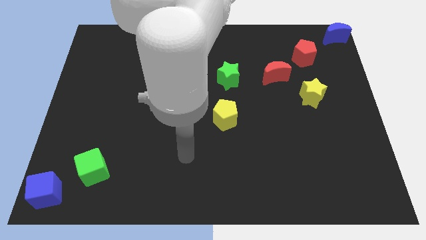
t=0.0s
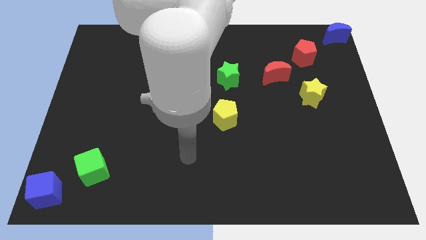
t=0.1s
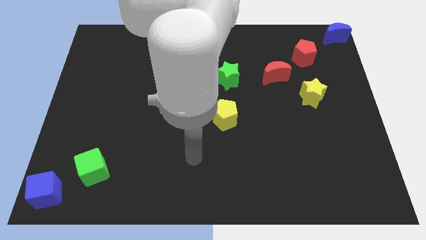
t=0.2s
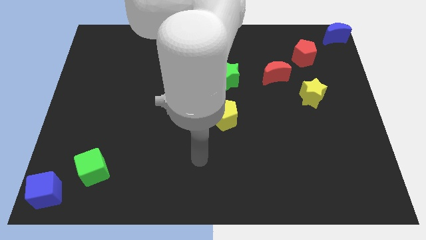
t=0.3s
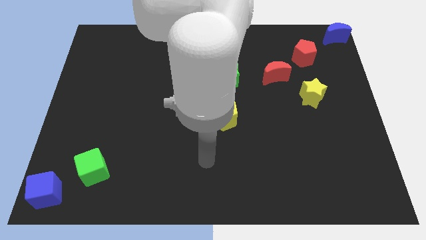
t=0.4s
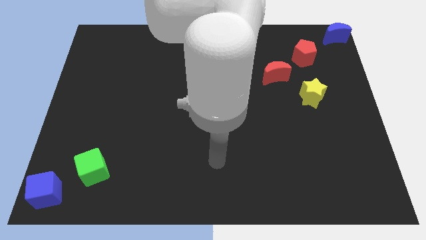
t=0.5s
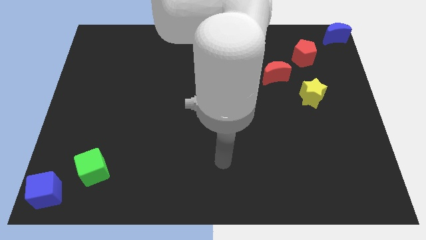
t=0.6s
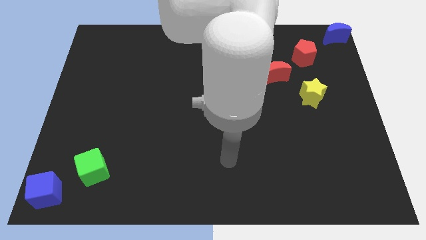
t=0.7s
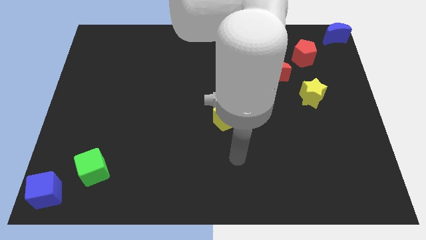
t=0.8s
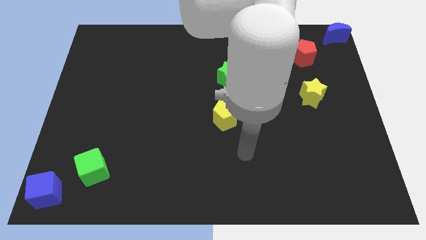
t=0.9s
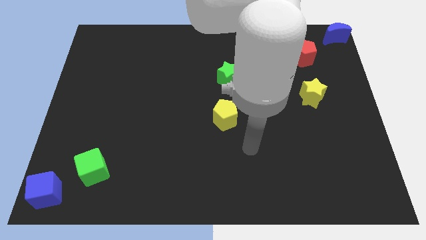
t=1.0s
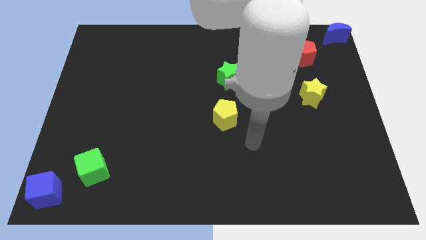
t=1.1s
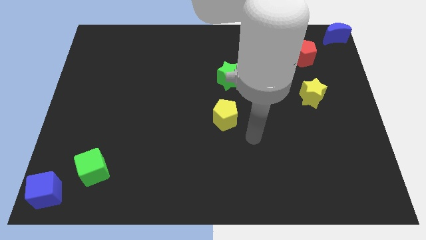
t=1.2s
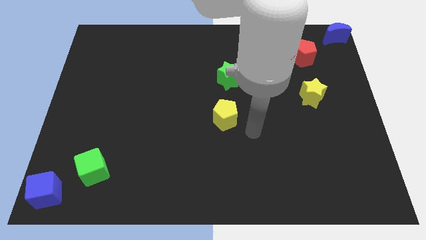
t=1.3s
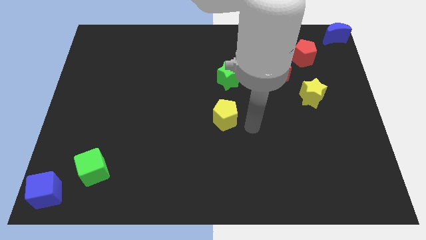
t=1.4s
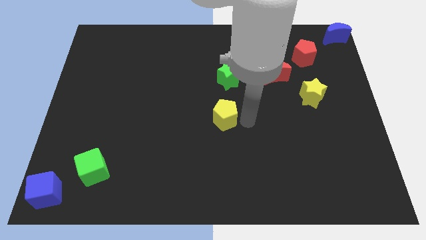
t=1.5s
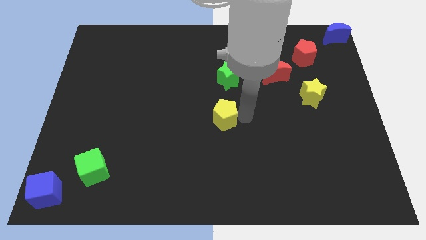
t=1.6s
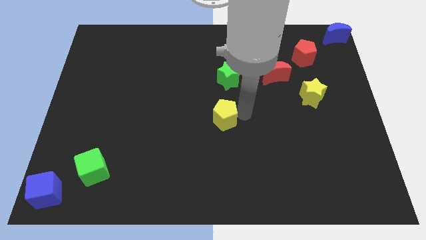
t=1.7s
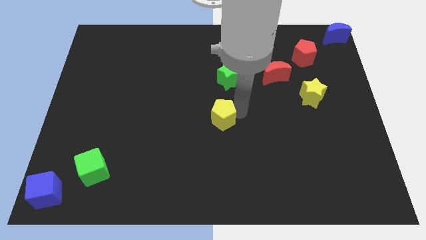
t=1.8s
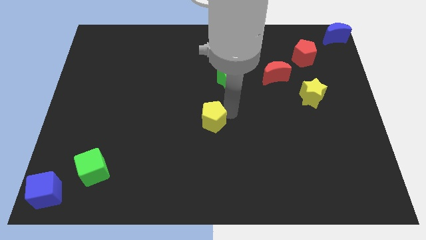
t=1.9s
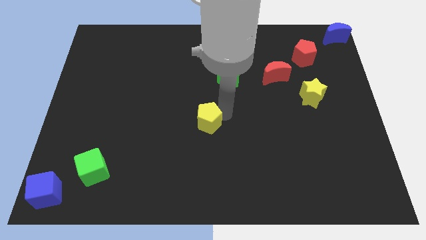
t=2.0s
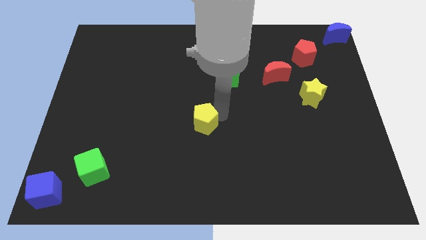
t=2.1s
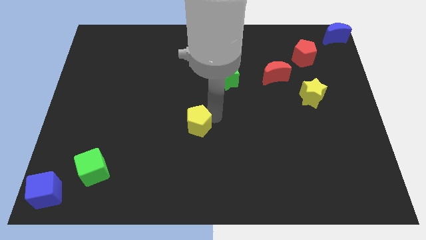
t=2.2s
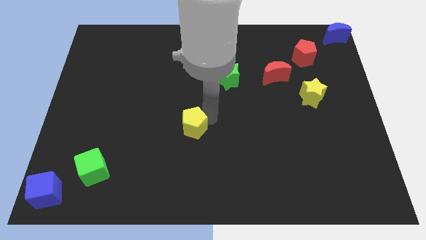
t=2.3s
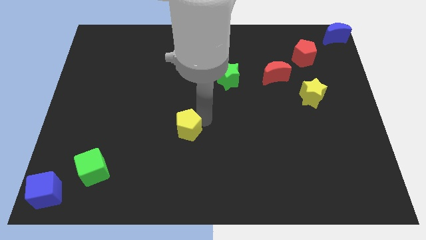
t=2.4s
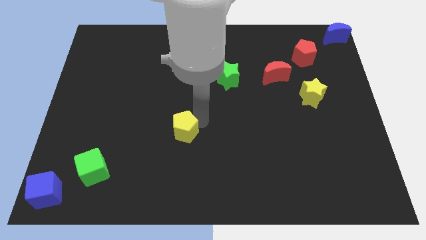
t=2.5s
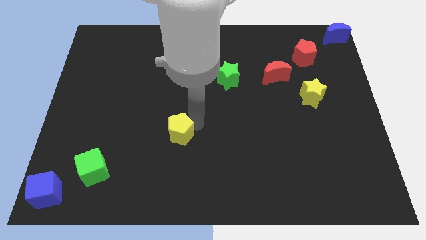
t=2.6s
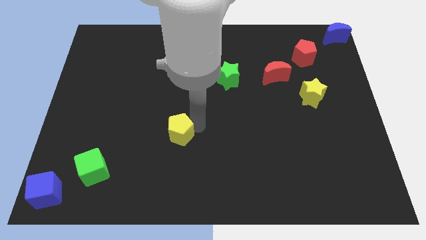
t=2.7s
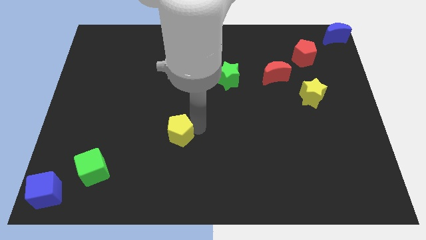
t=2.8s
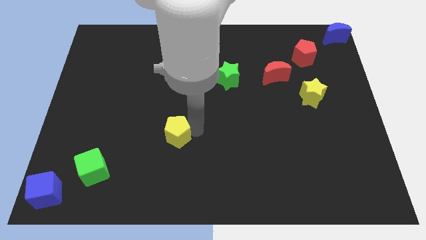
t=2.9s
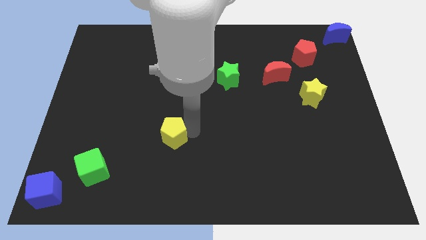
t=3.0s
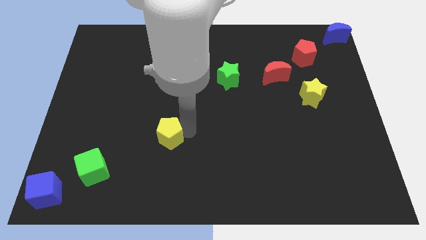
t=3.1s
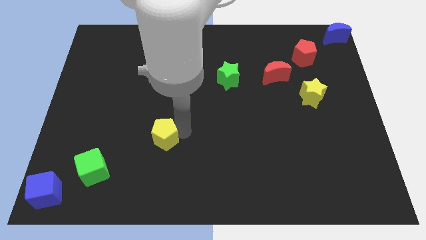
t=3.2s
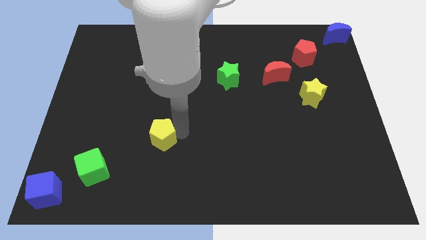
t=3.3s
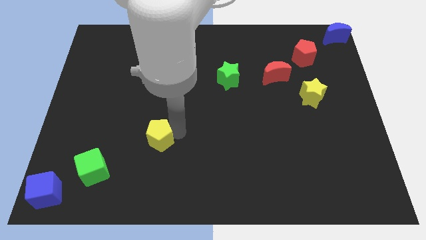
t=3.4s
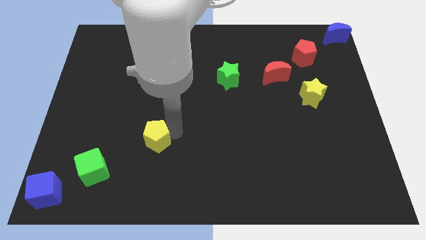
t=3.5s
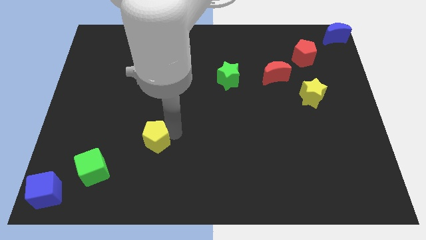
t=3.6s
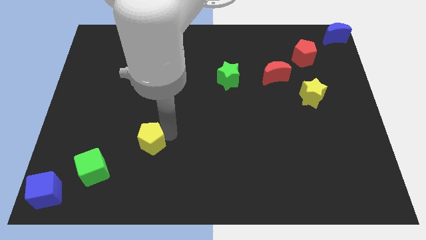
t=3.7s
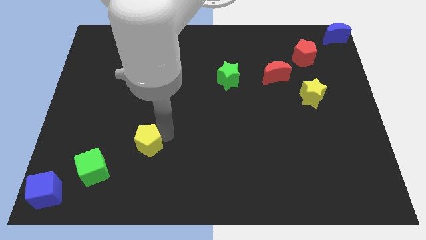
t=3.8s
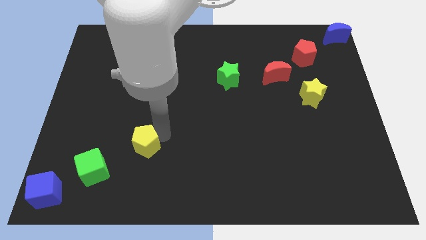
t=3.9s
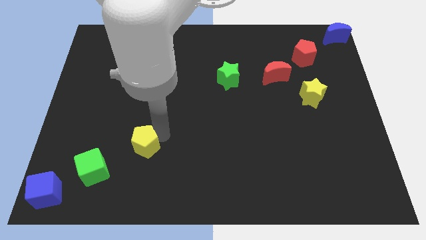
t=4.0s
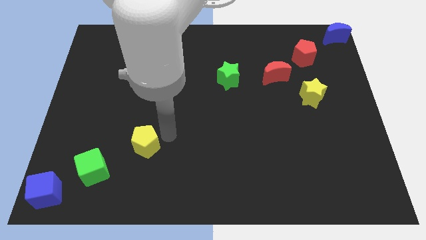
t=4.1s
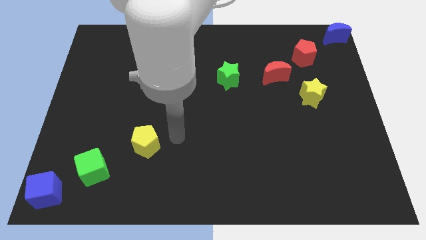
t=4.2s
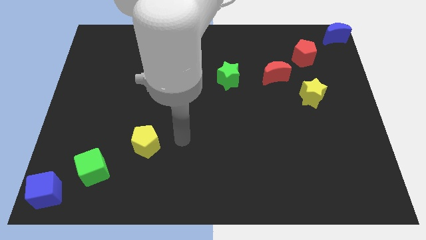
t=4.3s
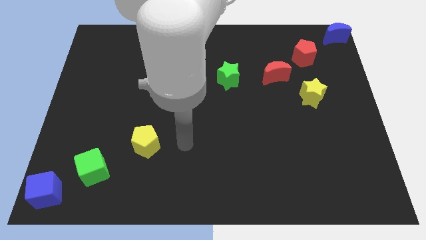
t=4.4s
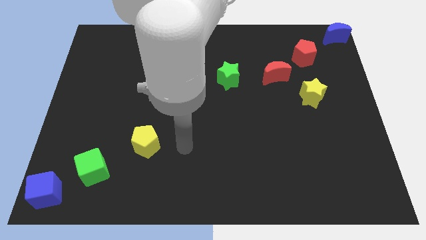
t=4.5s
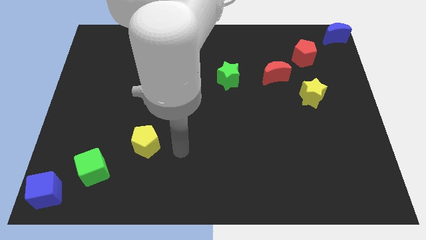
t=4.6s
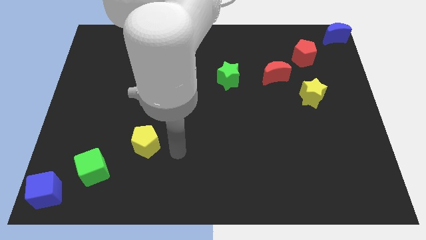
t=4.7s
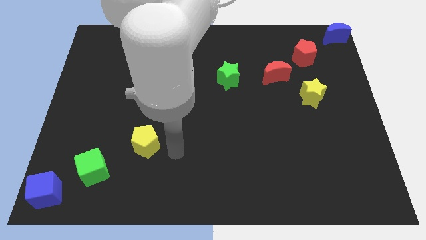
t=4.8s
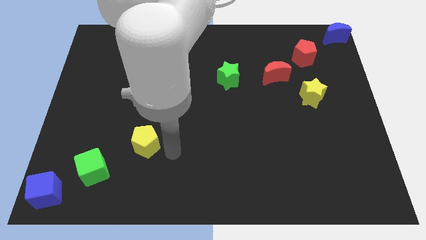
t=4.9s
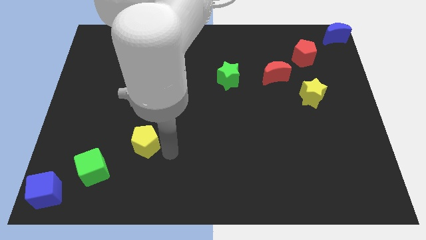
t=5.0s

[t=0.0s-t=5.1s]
place yellow pentagon near green cube

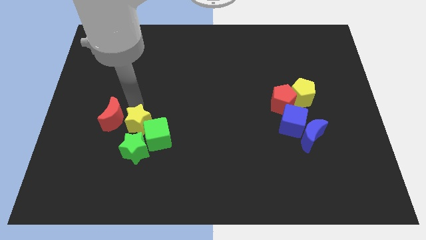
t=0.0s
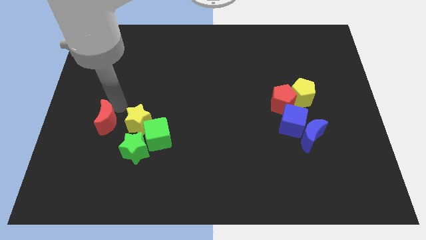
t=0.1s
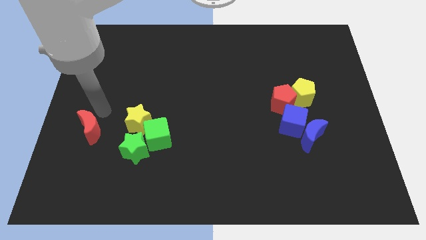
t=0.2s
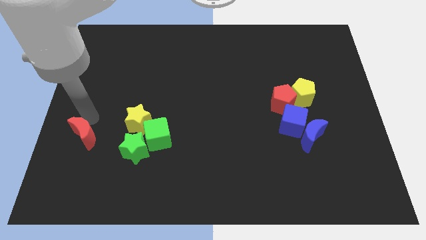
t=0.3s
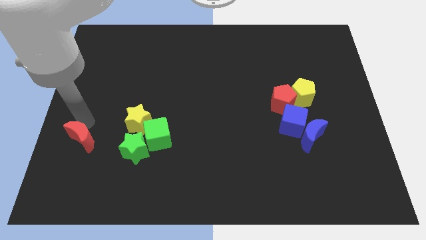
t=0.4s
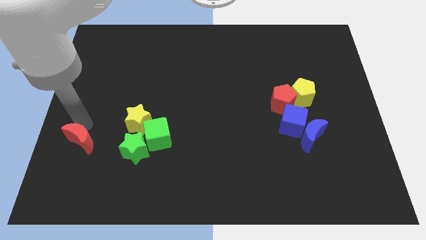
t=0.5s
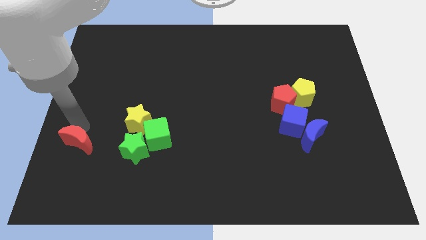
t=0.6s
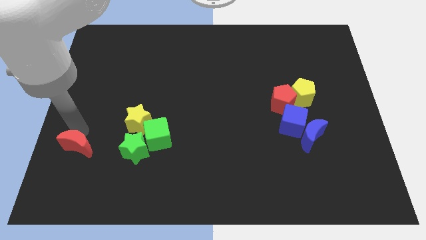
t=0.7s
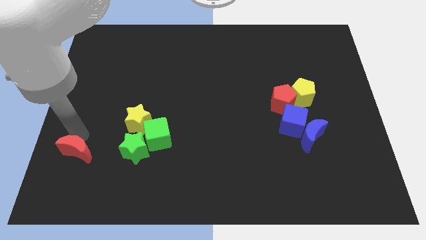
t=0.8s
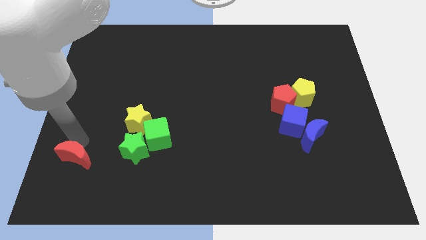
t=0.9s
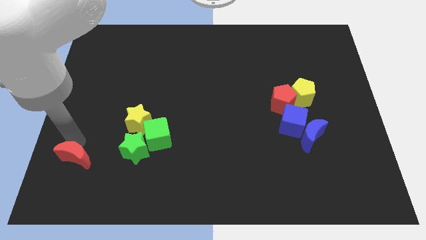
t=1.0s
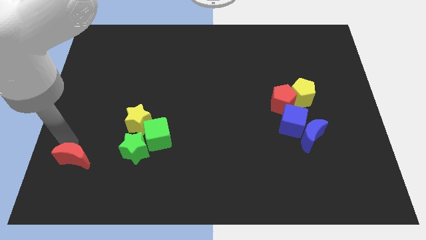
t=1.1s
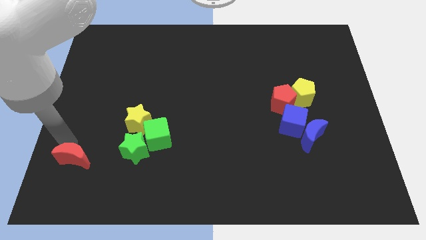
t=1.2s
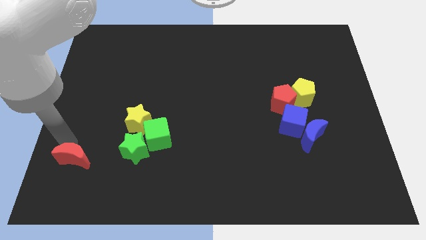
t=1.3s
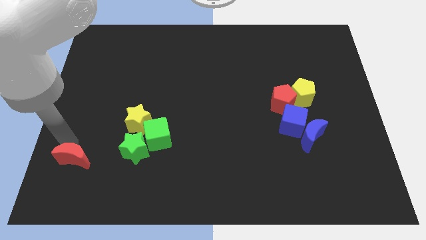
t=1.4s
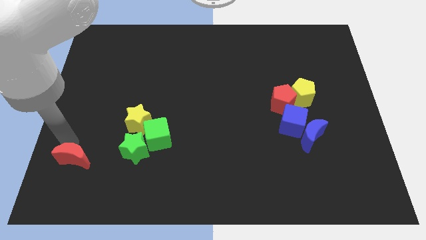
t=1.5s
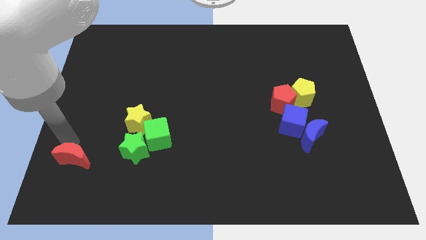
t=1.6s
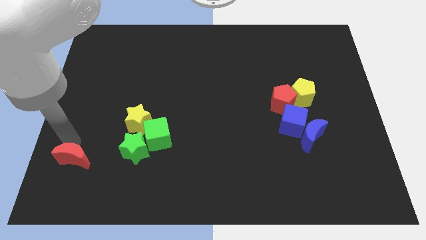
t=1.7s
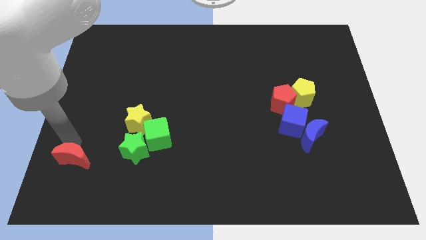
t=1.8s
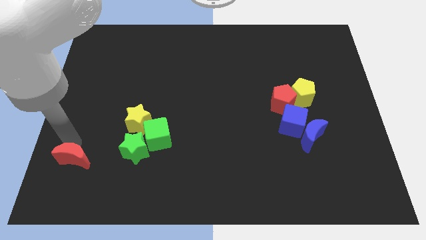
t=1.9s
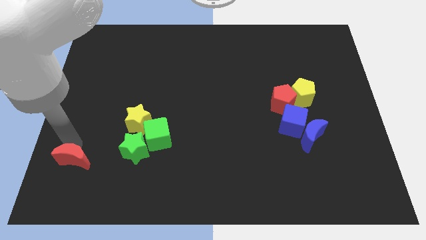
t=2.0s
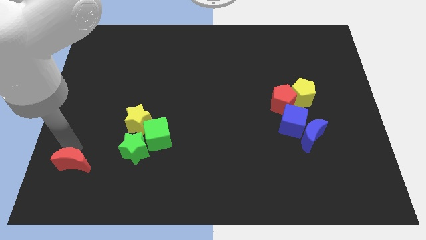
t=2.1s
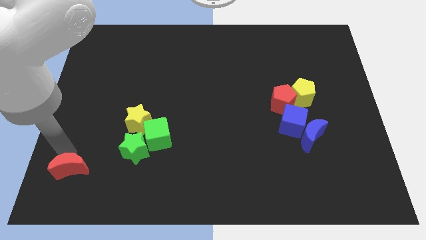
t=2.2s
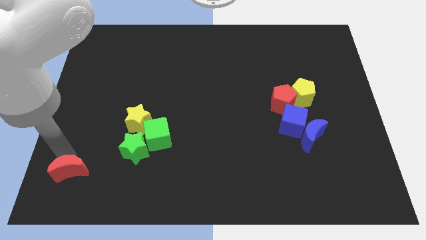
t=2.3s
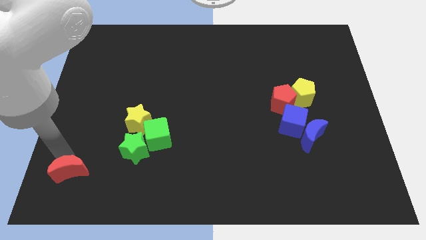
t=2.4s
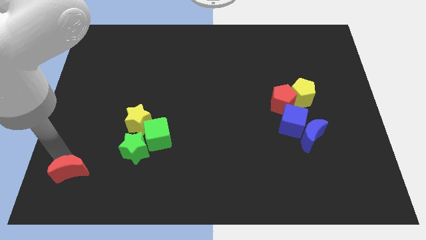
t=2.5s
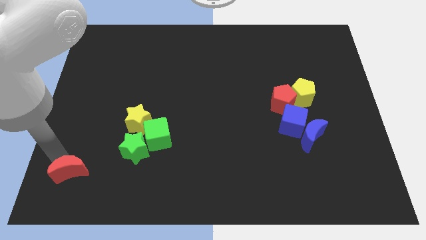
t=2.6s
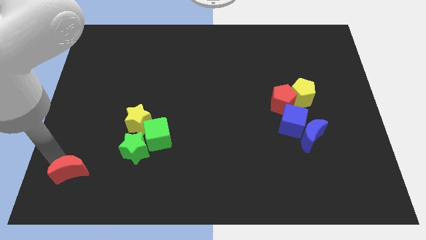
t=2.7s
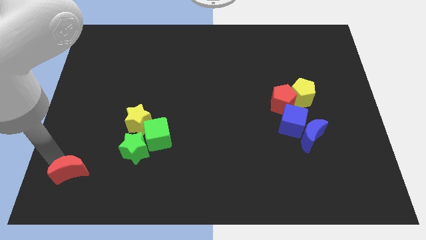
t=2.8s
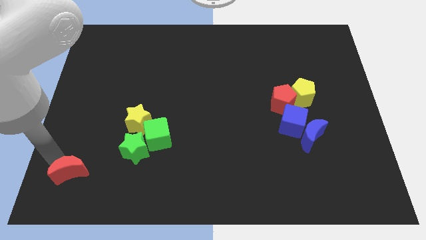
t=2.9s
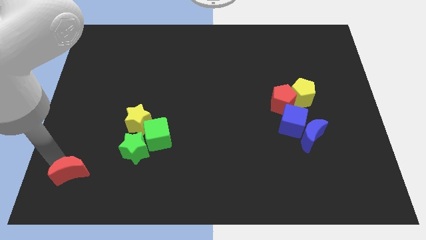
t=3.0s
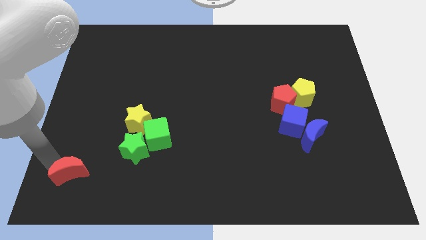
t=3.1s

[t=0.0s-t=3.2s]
push the red moon towards the bottom left corner

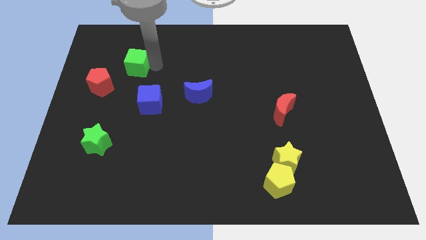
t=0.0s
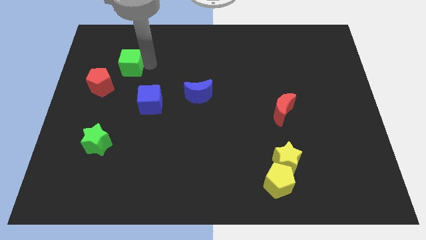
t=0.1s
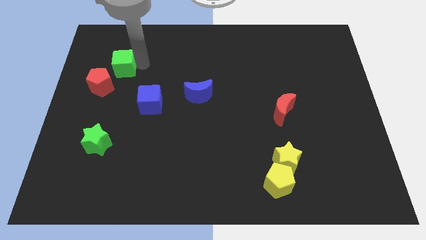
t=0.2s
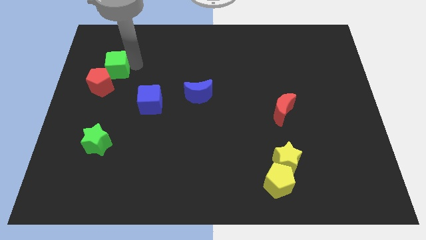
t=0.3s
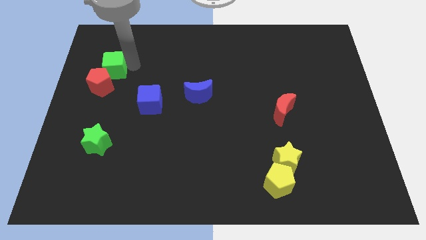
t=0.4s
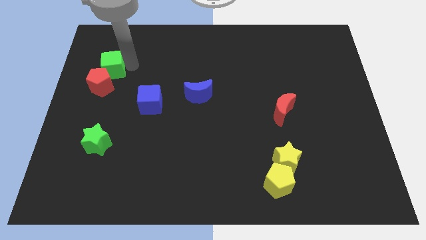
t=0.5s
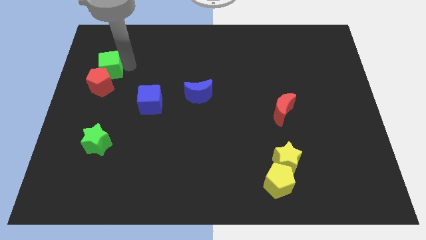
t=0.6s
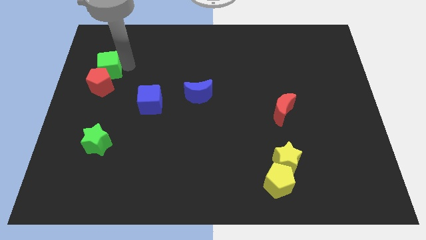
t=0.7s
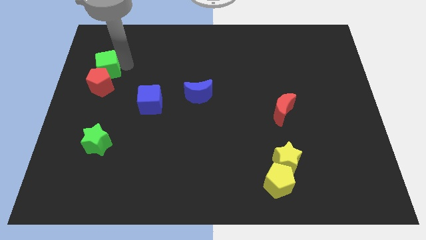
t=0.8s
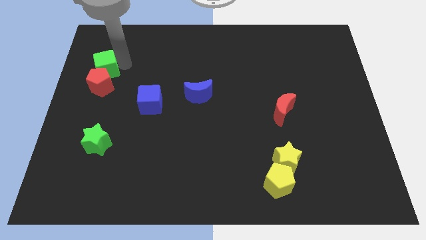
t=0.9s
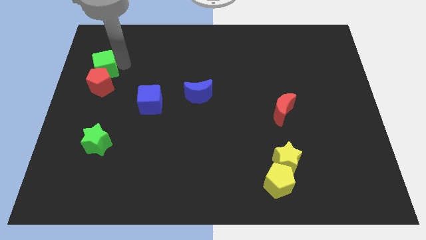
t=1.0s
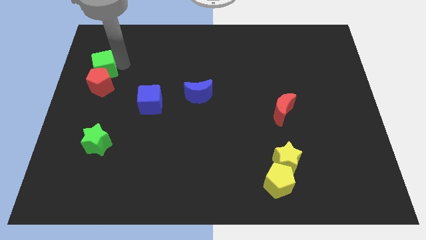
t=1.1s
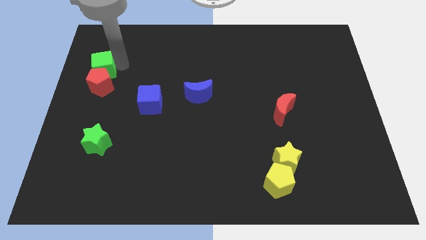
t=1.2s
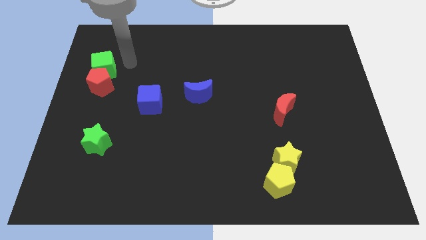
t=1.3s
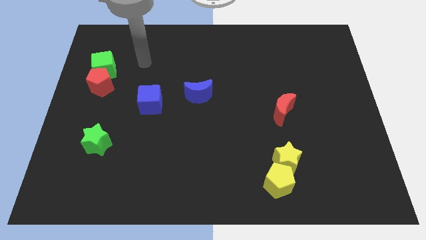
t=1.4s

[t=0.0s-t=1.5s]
push the green cube towards the top side of the red pentagon
